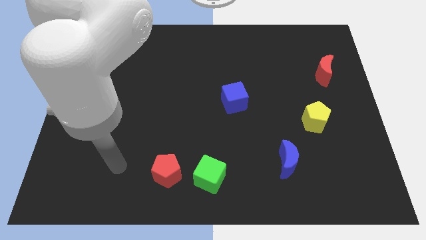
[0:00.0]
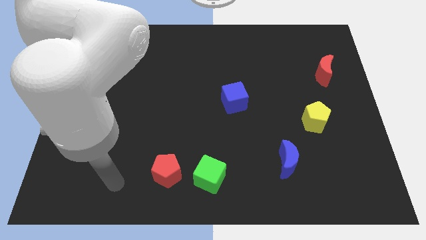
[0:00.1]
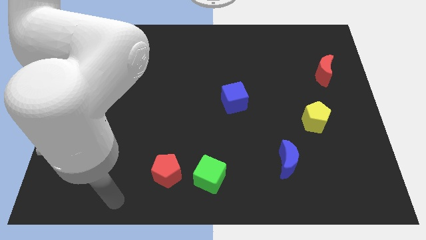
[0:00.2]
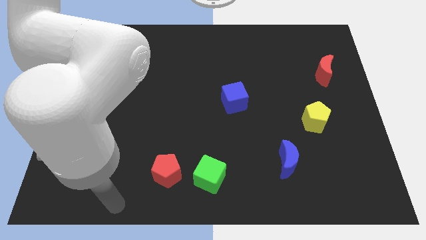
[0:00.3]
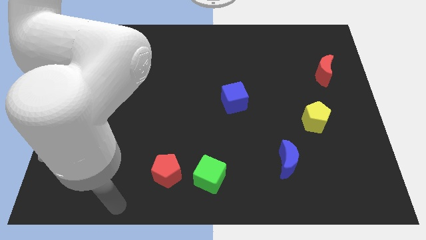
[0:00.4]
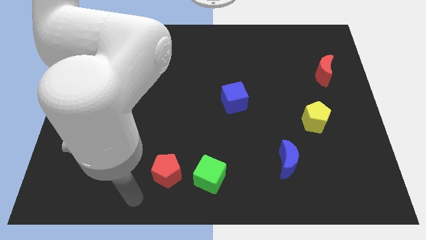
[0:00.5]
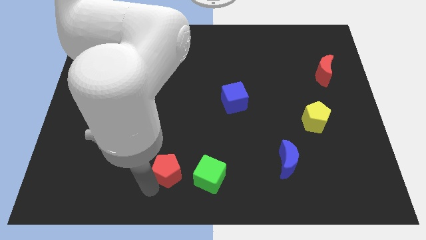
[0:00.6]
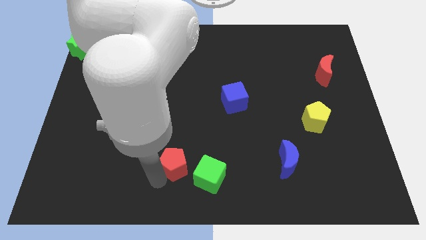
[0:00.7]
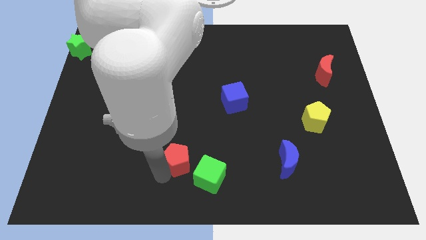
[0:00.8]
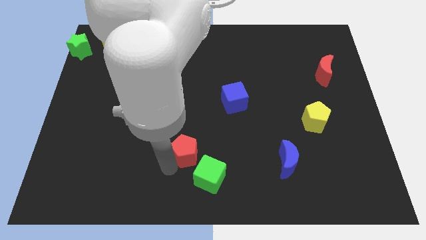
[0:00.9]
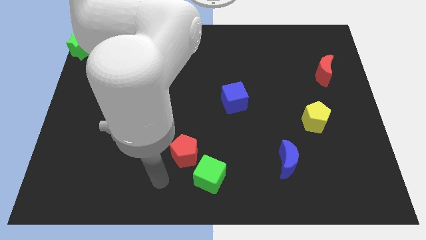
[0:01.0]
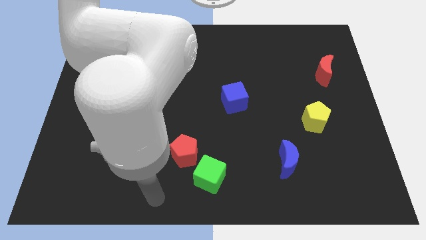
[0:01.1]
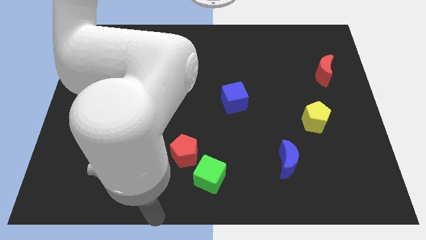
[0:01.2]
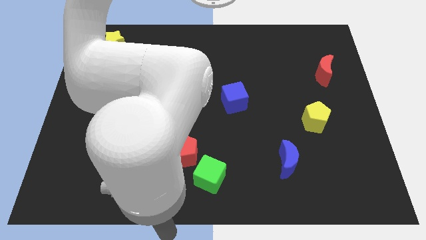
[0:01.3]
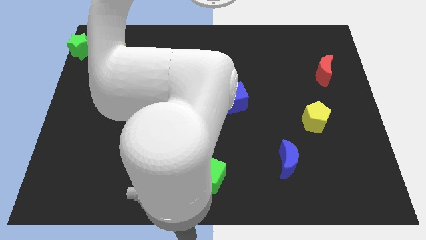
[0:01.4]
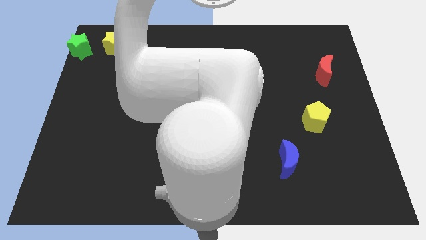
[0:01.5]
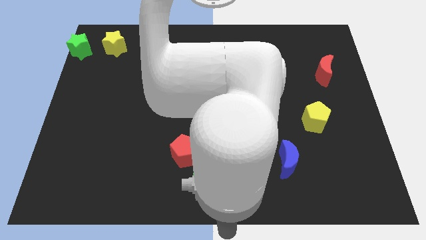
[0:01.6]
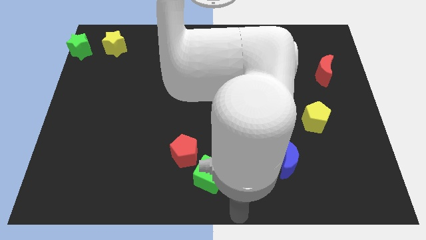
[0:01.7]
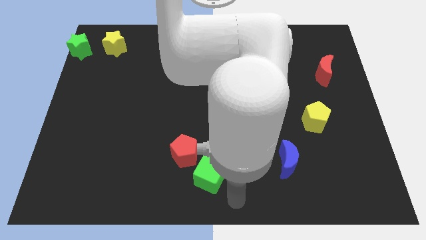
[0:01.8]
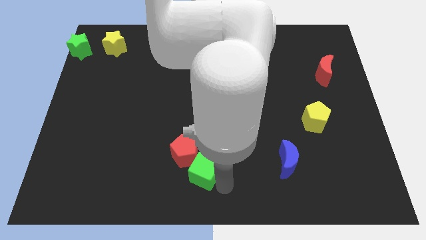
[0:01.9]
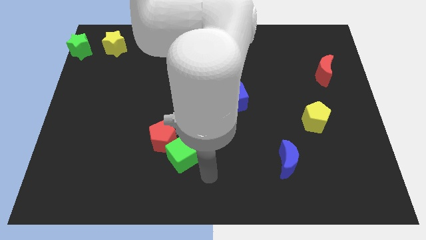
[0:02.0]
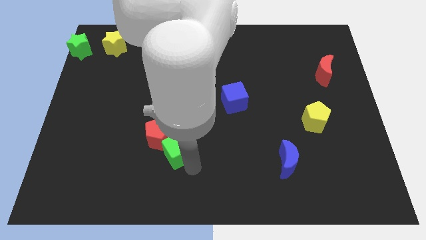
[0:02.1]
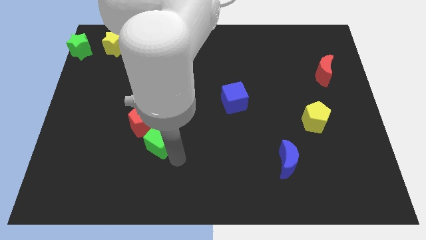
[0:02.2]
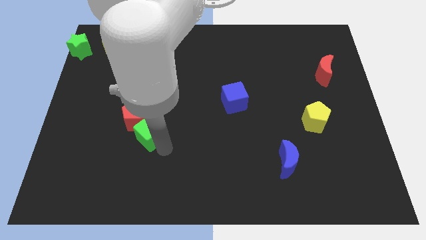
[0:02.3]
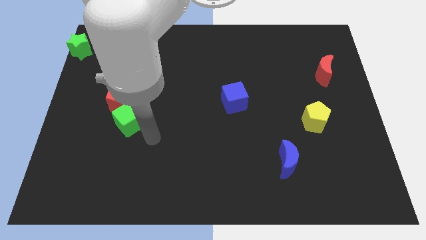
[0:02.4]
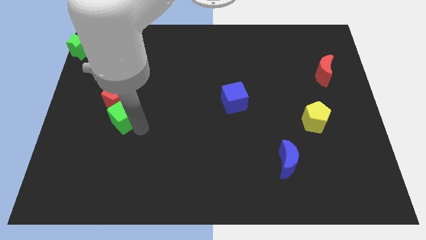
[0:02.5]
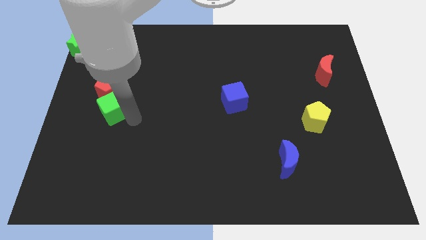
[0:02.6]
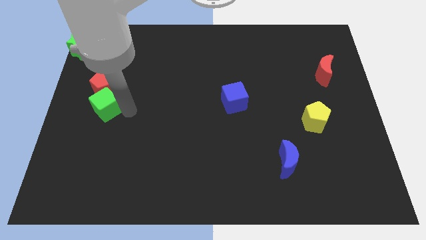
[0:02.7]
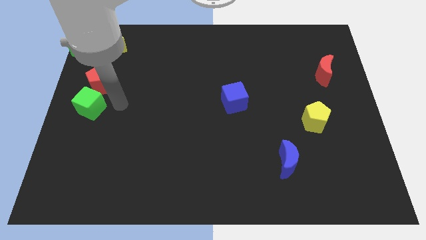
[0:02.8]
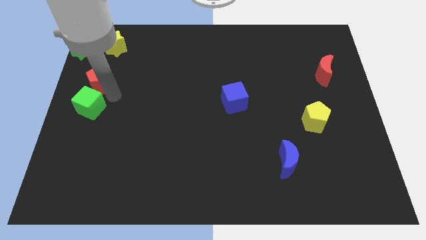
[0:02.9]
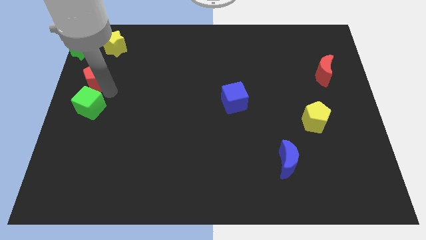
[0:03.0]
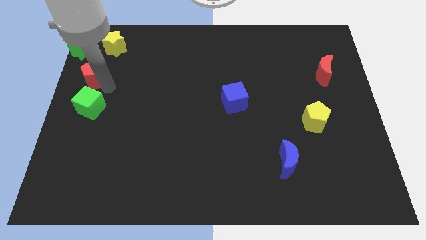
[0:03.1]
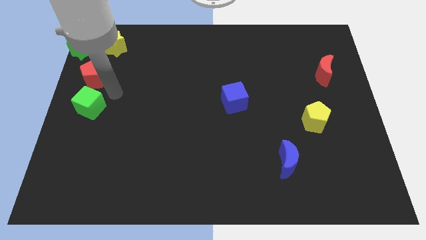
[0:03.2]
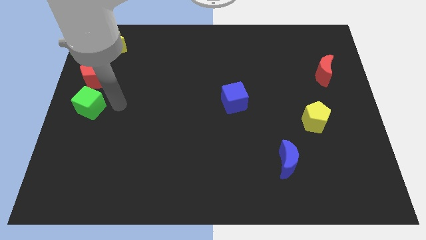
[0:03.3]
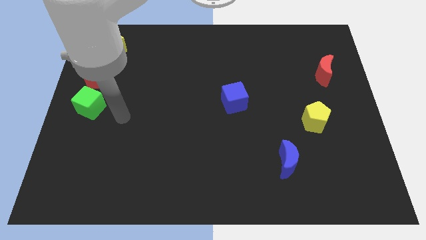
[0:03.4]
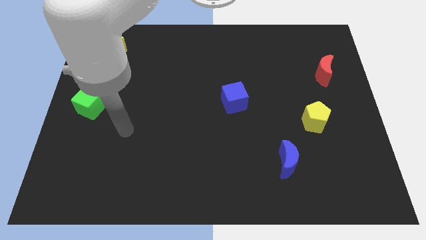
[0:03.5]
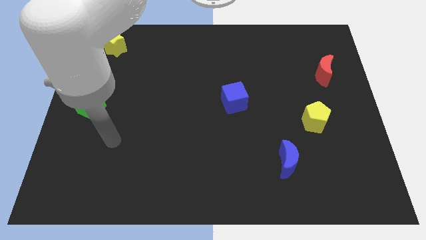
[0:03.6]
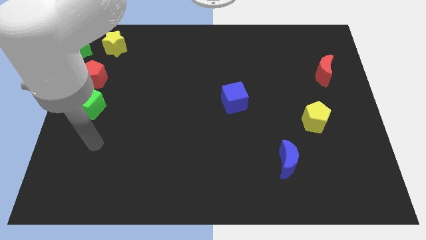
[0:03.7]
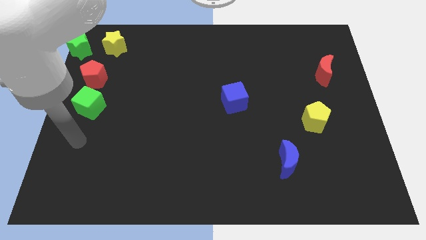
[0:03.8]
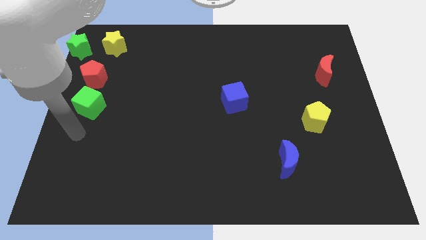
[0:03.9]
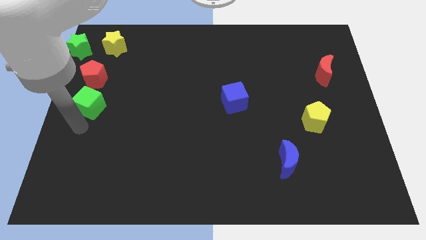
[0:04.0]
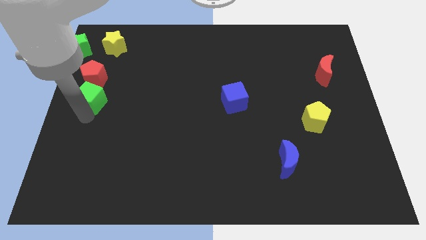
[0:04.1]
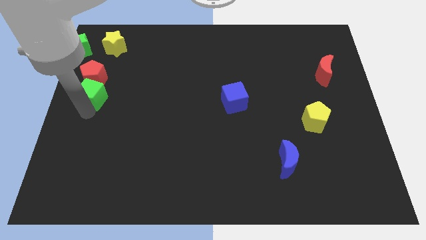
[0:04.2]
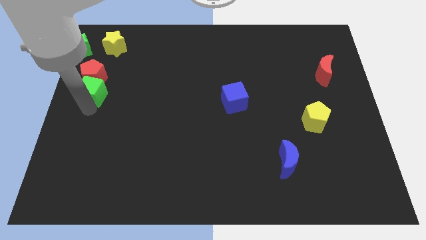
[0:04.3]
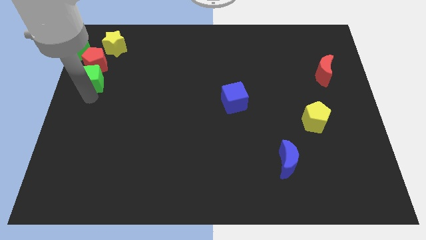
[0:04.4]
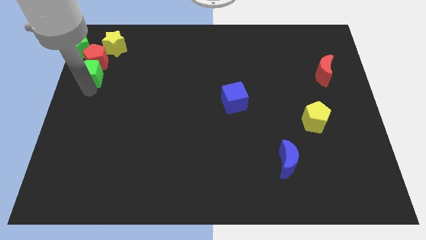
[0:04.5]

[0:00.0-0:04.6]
move the red pentagon along with the green cube towards the green star

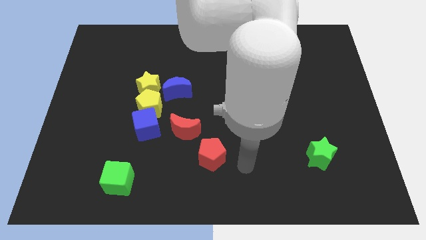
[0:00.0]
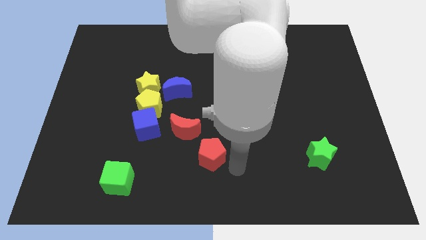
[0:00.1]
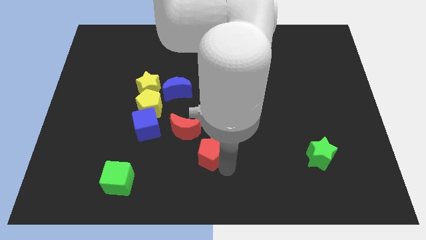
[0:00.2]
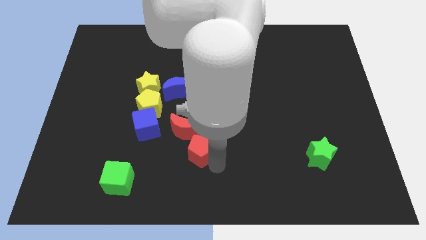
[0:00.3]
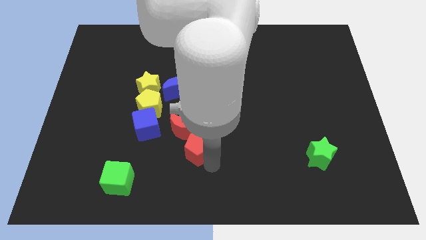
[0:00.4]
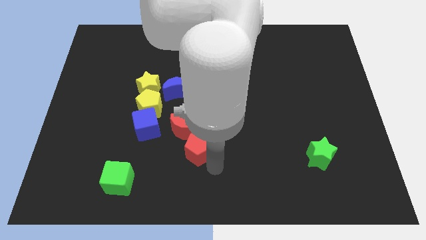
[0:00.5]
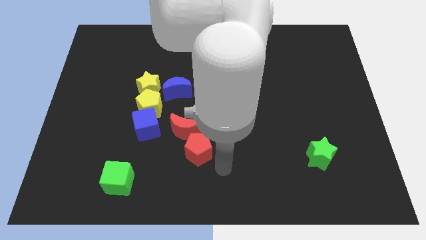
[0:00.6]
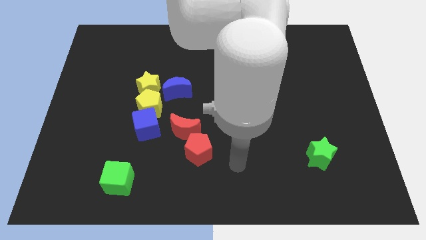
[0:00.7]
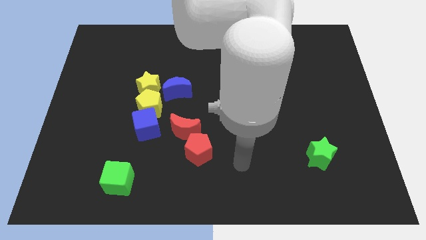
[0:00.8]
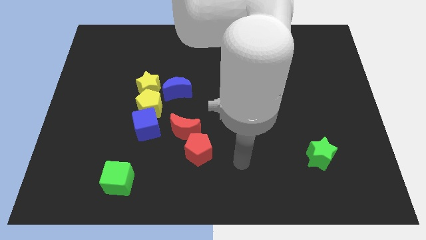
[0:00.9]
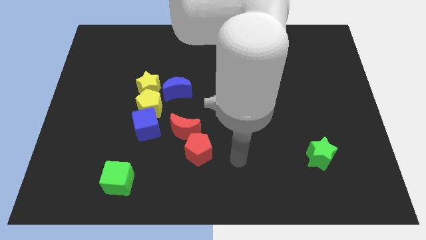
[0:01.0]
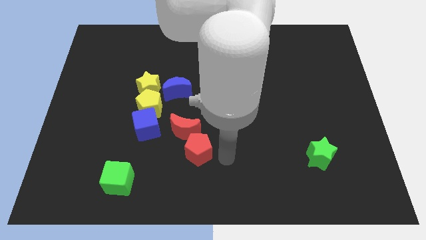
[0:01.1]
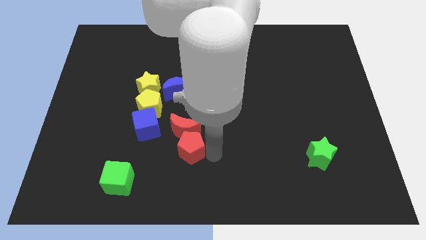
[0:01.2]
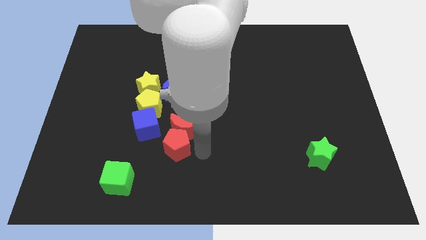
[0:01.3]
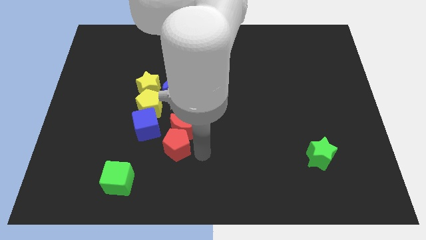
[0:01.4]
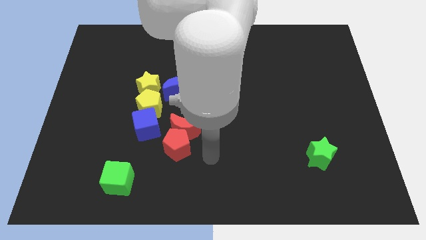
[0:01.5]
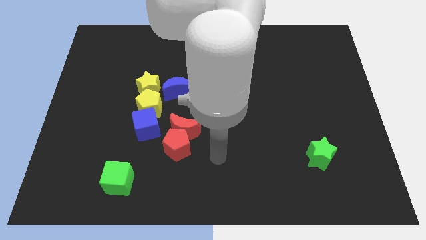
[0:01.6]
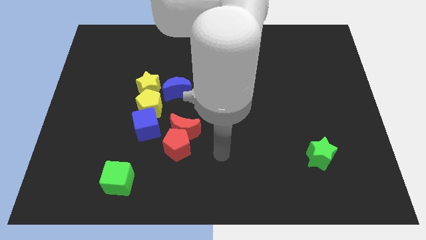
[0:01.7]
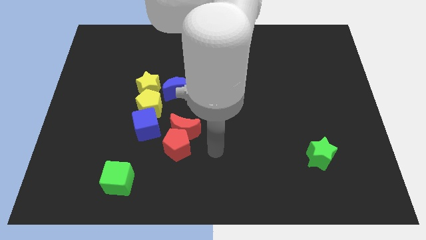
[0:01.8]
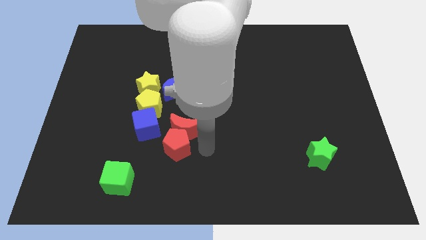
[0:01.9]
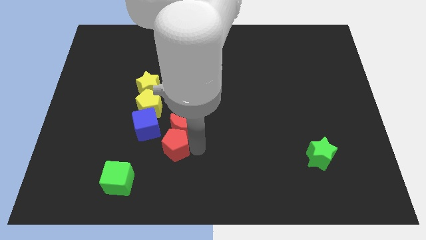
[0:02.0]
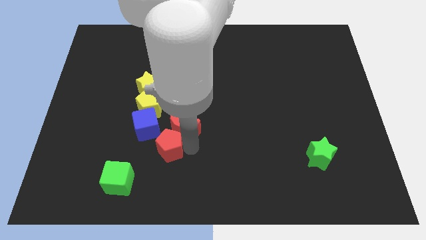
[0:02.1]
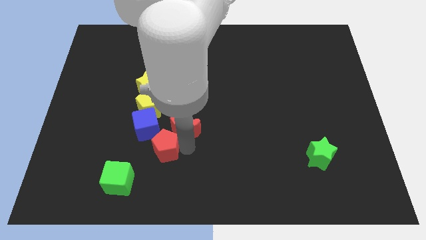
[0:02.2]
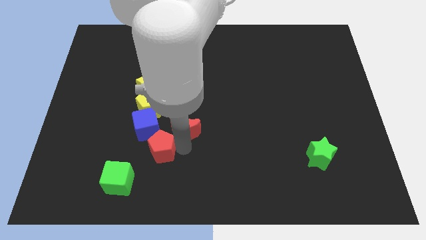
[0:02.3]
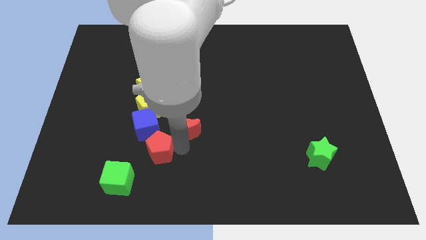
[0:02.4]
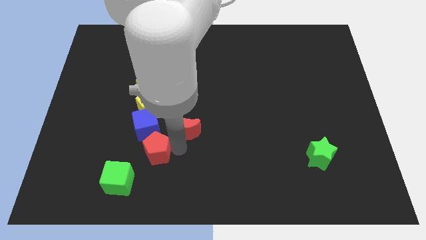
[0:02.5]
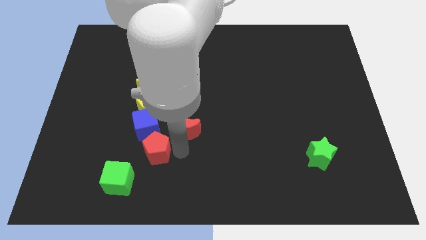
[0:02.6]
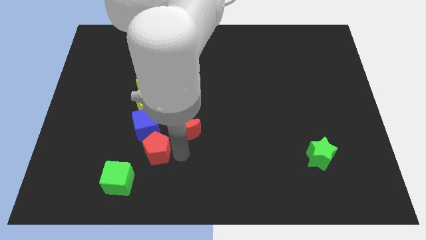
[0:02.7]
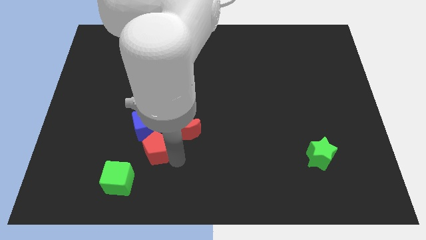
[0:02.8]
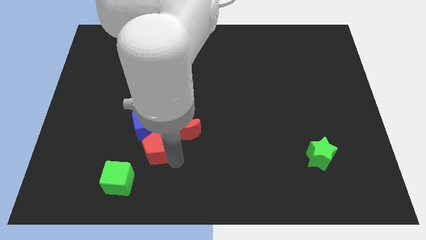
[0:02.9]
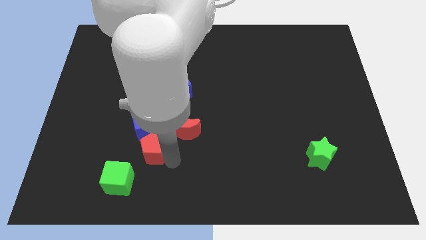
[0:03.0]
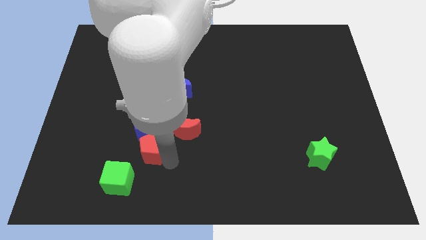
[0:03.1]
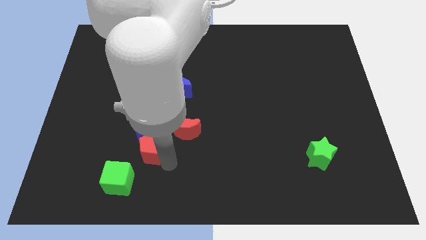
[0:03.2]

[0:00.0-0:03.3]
move the red pentagon towards the bottom of the blue cube

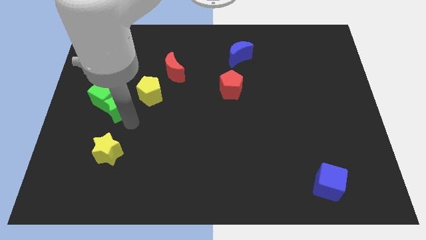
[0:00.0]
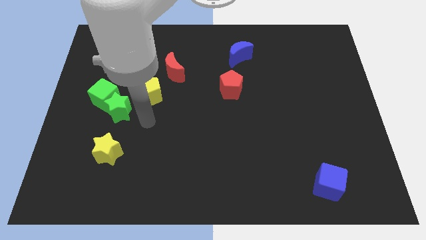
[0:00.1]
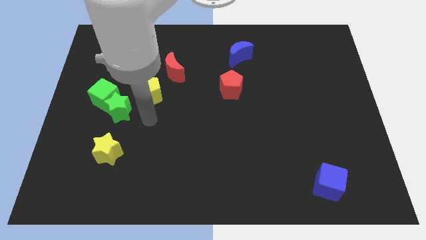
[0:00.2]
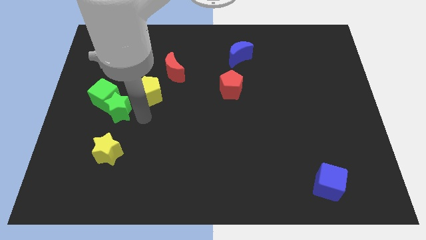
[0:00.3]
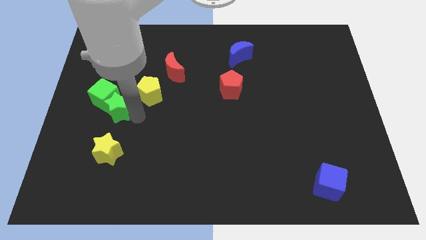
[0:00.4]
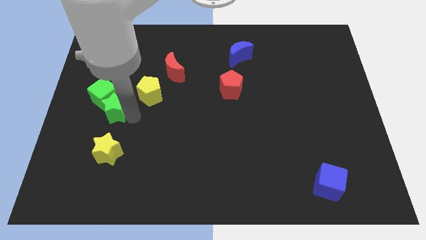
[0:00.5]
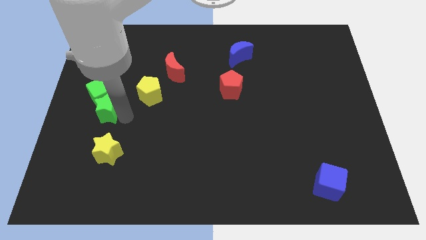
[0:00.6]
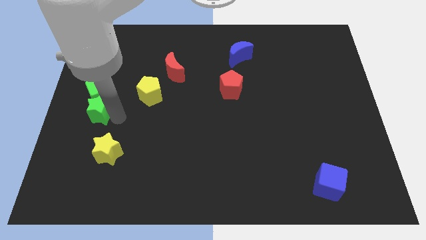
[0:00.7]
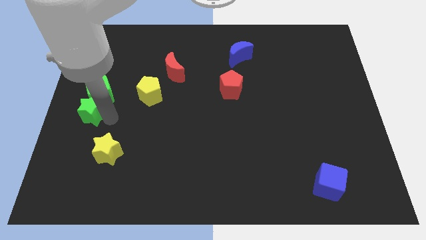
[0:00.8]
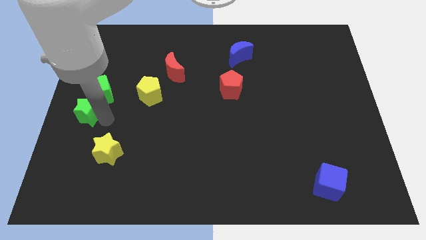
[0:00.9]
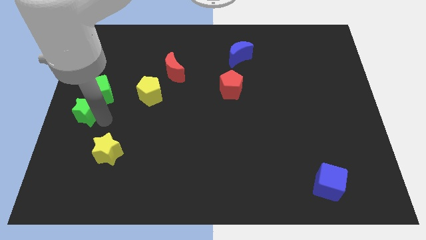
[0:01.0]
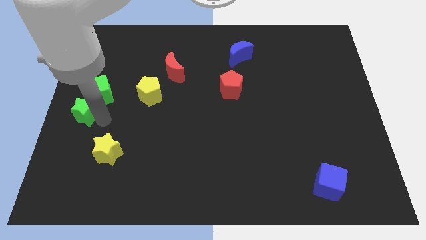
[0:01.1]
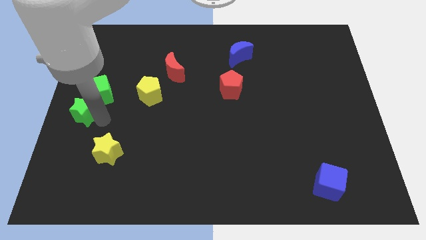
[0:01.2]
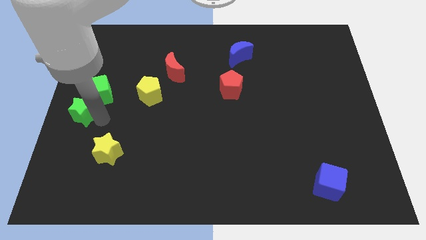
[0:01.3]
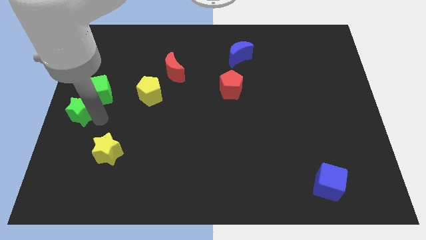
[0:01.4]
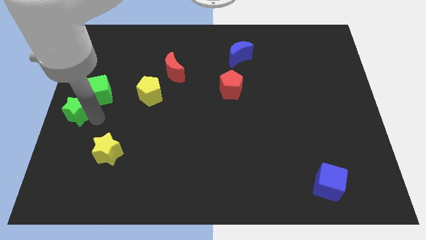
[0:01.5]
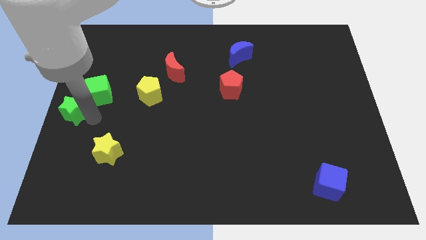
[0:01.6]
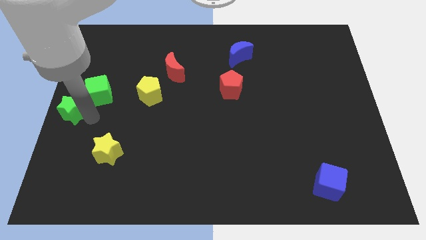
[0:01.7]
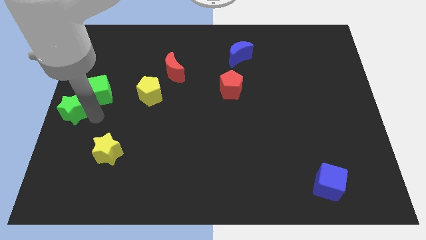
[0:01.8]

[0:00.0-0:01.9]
place the green star above the yellow star
